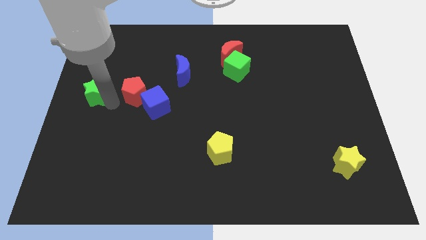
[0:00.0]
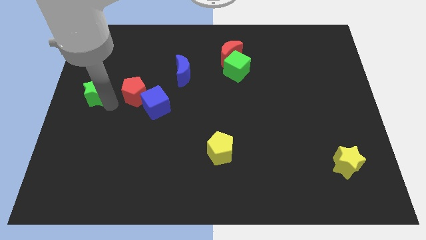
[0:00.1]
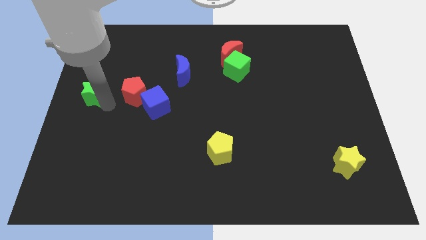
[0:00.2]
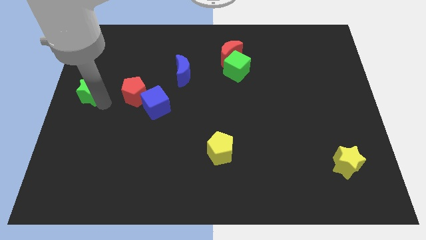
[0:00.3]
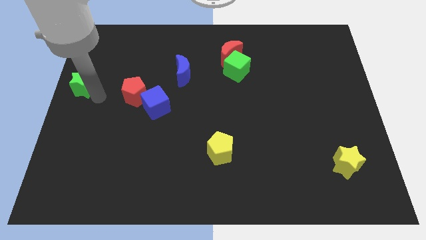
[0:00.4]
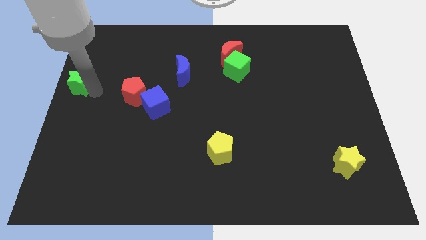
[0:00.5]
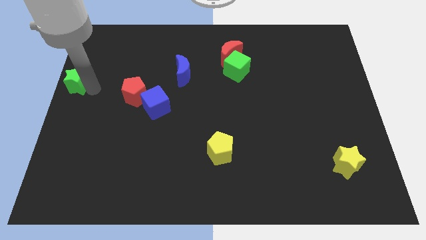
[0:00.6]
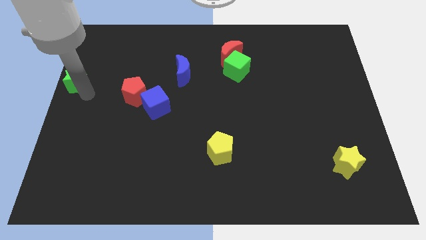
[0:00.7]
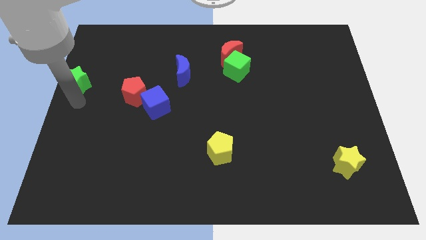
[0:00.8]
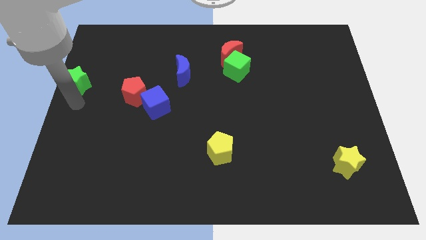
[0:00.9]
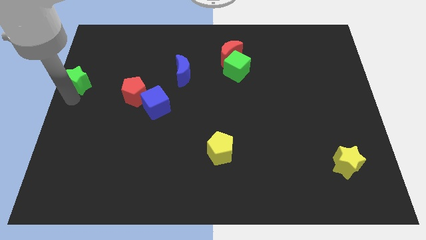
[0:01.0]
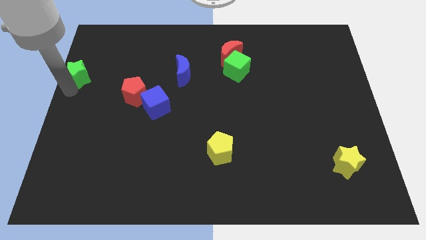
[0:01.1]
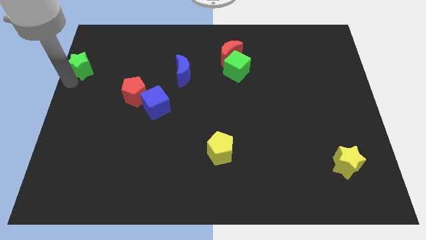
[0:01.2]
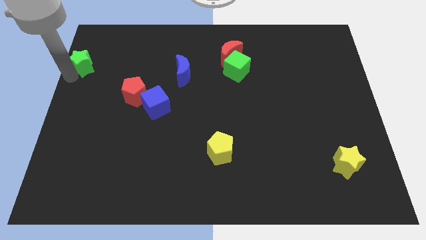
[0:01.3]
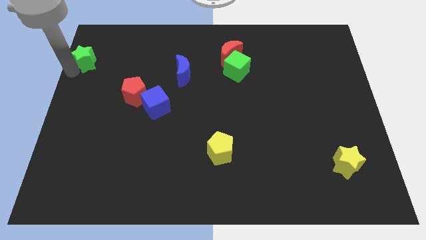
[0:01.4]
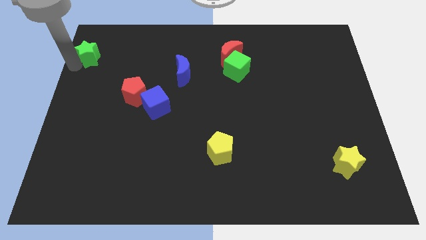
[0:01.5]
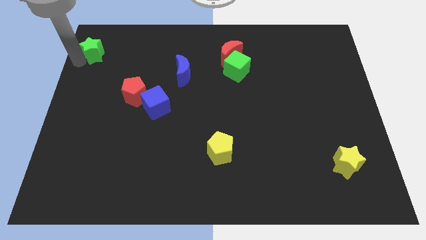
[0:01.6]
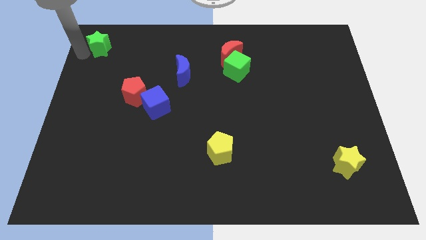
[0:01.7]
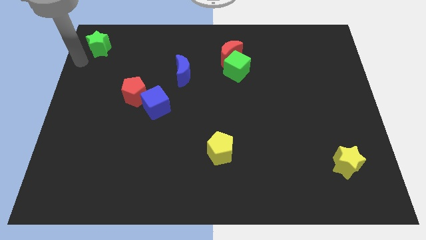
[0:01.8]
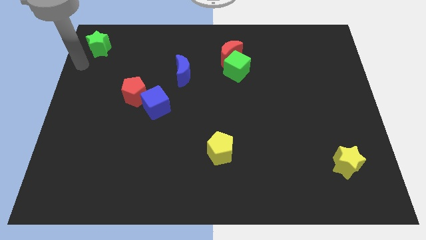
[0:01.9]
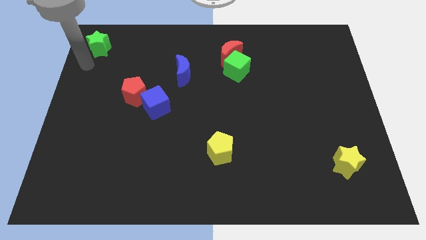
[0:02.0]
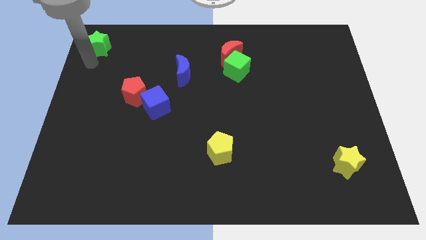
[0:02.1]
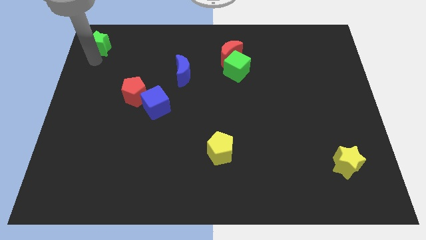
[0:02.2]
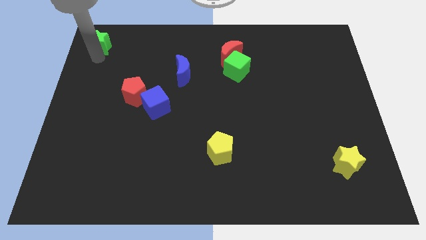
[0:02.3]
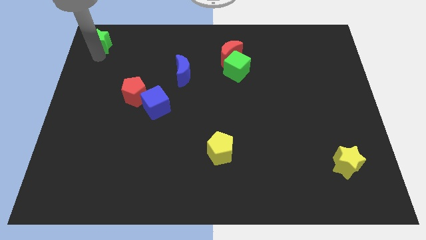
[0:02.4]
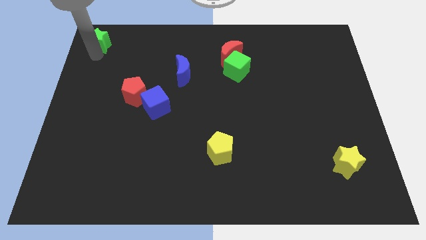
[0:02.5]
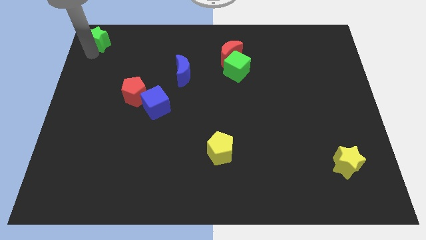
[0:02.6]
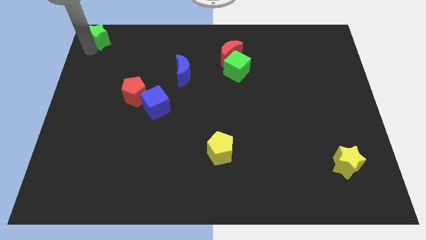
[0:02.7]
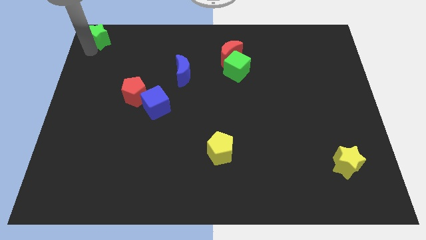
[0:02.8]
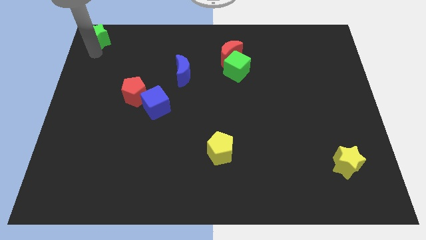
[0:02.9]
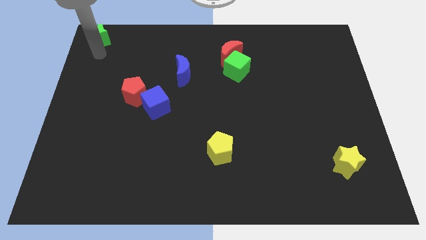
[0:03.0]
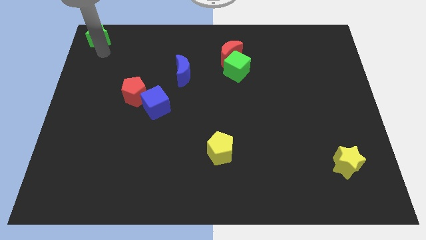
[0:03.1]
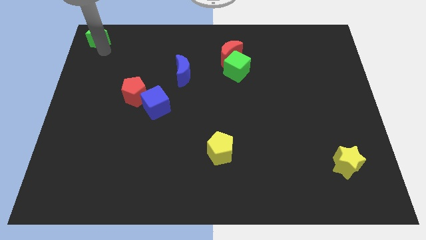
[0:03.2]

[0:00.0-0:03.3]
move the green star to the top left corner of the board

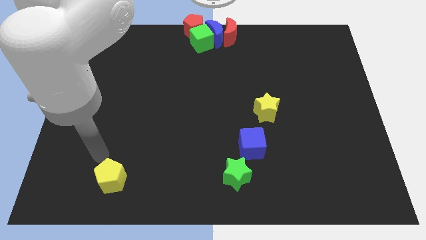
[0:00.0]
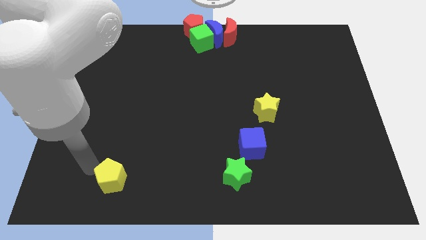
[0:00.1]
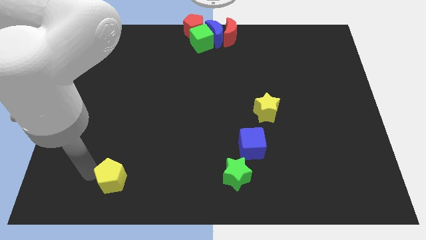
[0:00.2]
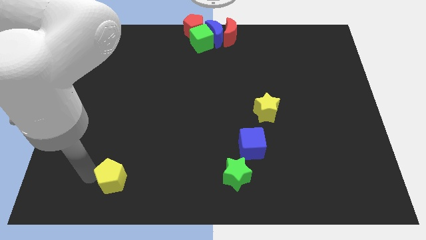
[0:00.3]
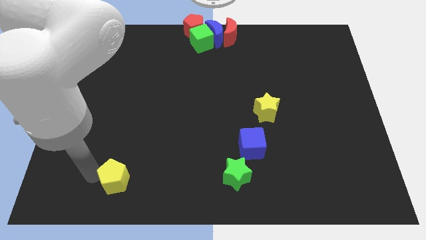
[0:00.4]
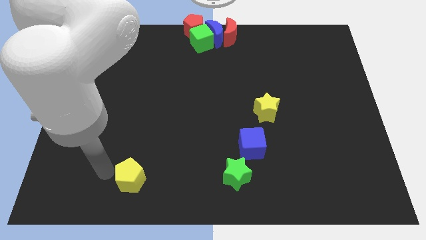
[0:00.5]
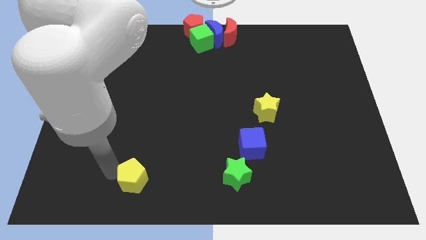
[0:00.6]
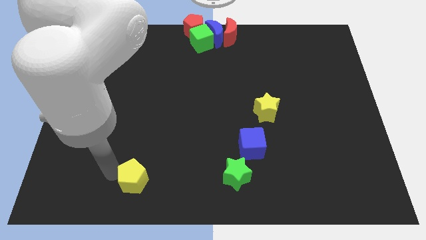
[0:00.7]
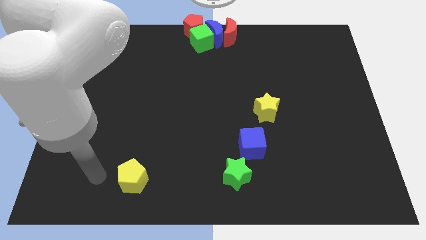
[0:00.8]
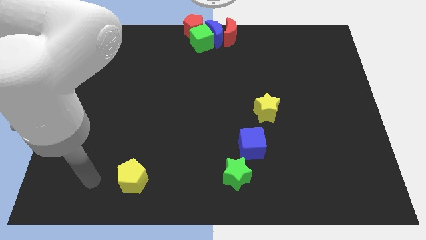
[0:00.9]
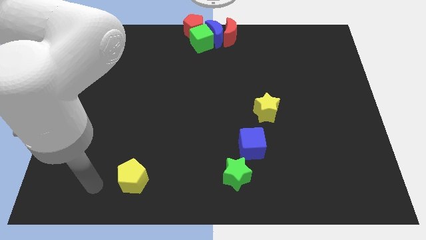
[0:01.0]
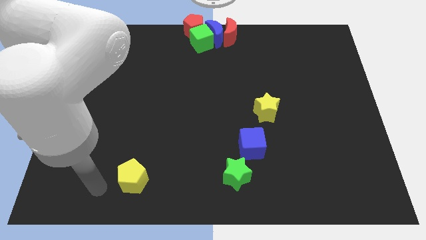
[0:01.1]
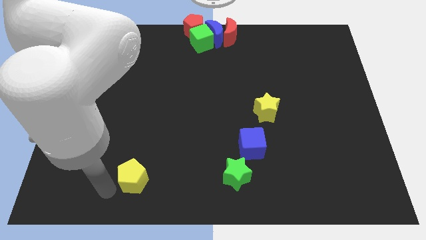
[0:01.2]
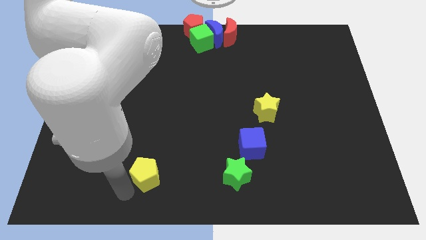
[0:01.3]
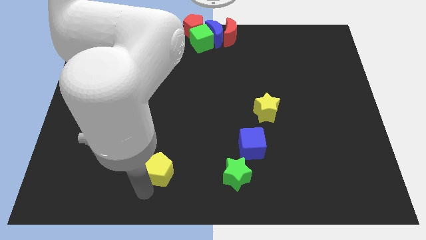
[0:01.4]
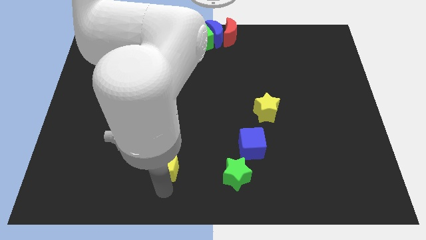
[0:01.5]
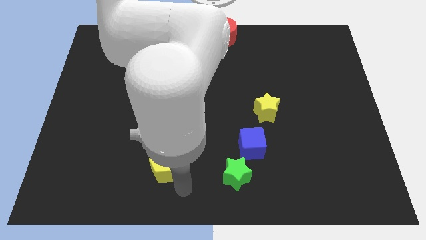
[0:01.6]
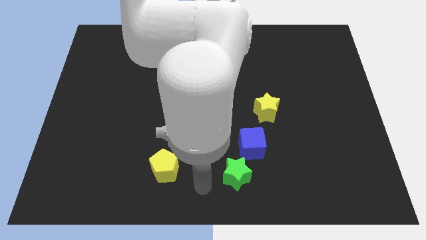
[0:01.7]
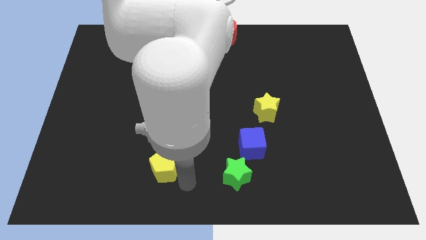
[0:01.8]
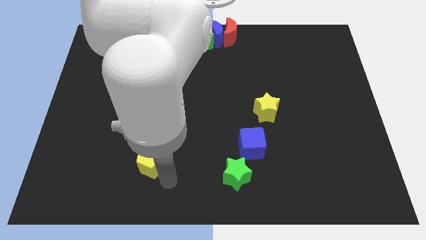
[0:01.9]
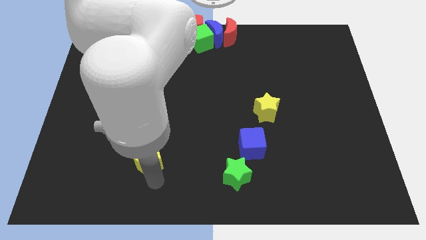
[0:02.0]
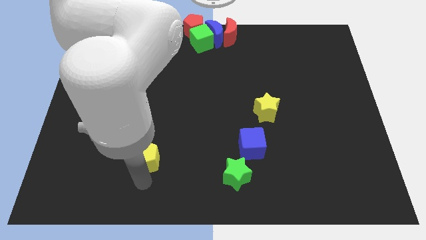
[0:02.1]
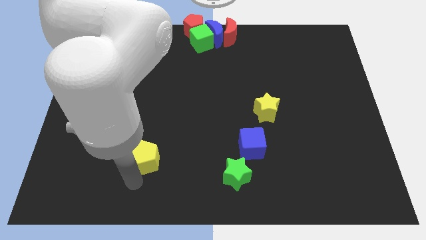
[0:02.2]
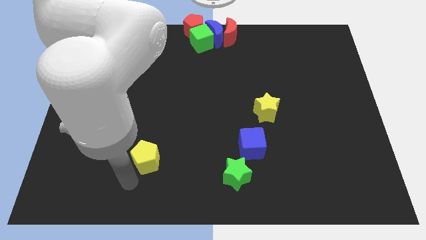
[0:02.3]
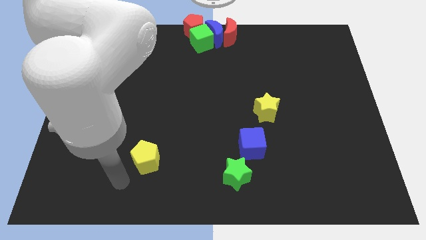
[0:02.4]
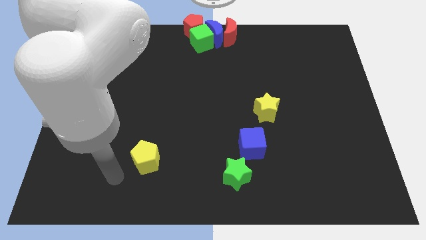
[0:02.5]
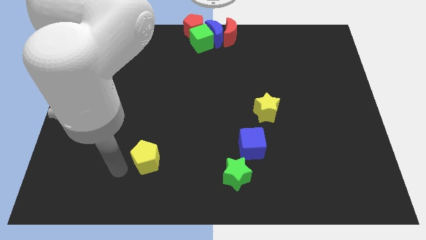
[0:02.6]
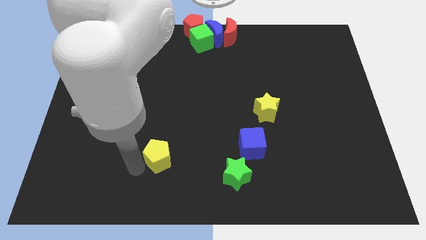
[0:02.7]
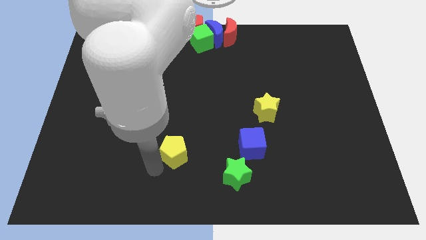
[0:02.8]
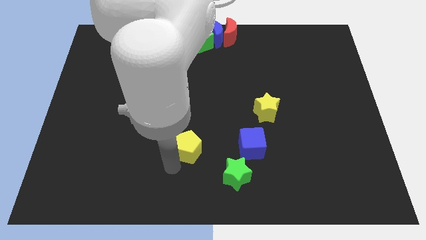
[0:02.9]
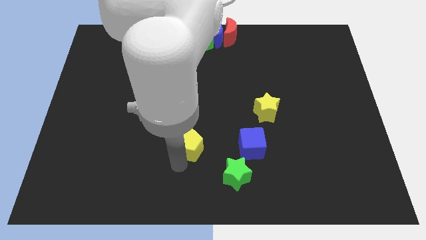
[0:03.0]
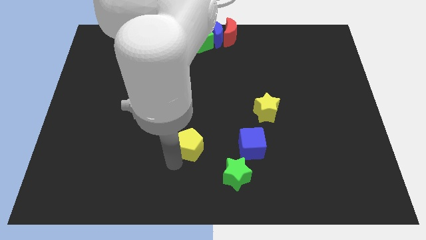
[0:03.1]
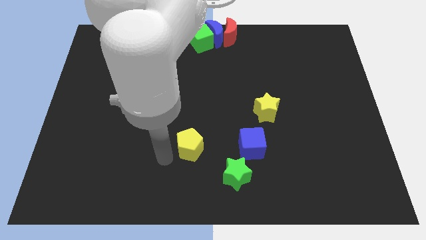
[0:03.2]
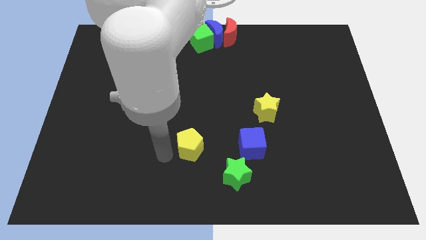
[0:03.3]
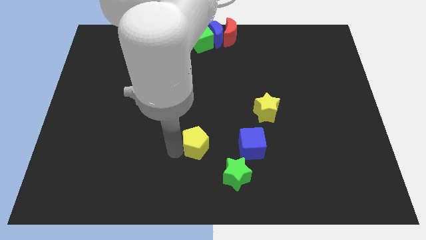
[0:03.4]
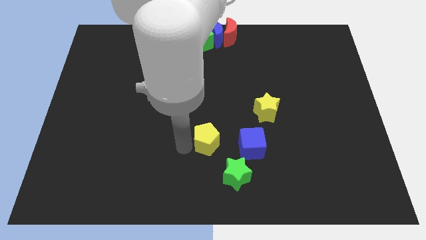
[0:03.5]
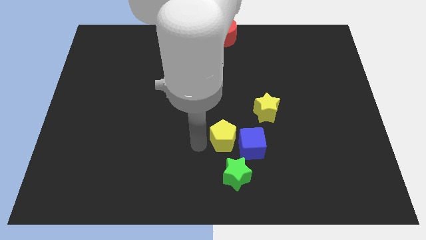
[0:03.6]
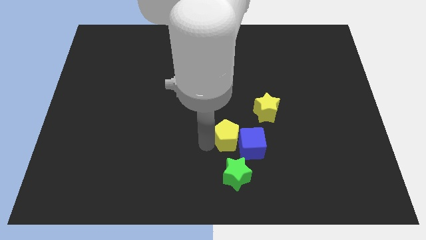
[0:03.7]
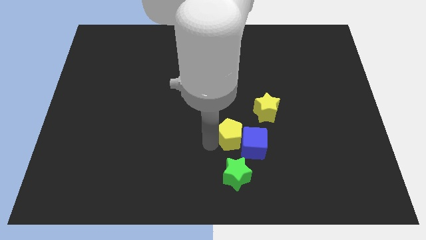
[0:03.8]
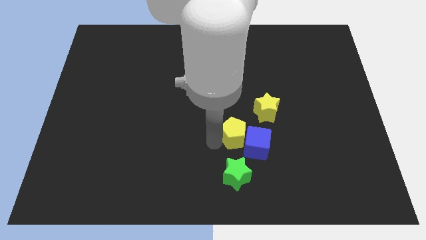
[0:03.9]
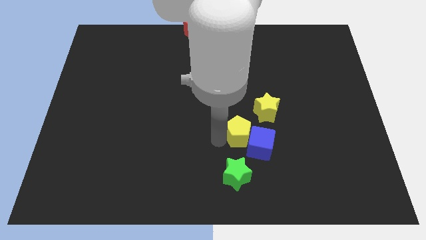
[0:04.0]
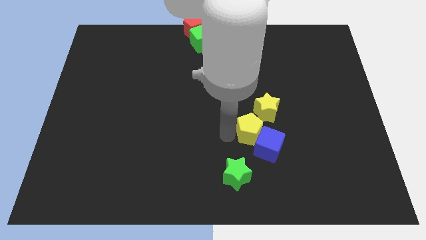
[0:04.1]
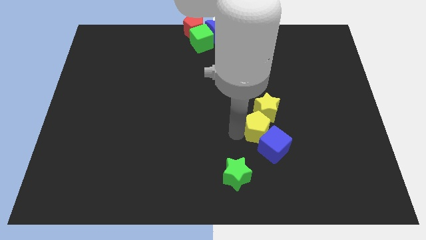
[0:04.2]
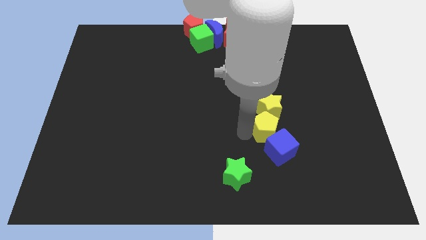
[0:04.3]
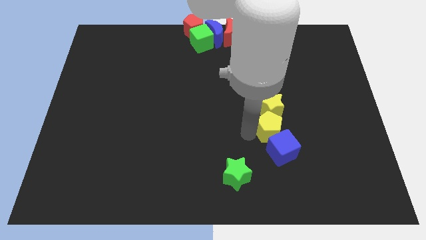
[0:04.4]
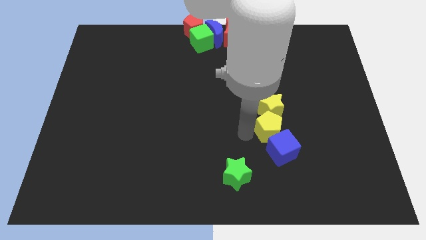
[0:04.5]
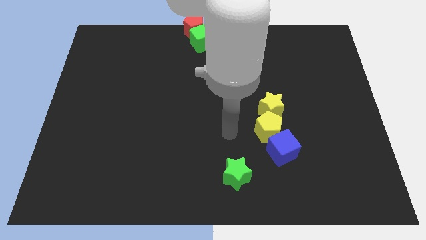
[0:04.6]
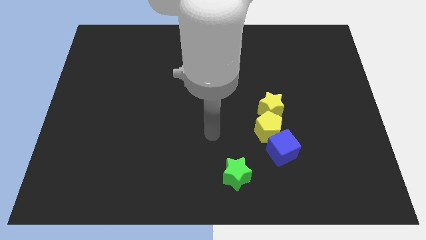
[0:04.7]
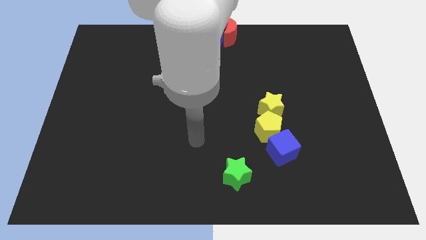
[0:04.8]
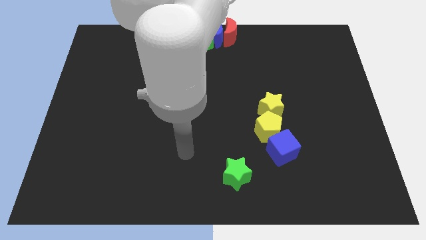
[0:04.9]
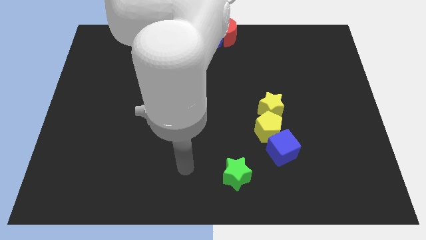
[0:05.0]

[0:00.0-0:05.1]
place the yellow pentagon in between the yellow star and the blue cube

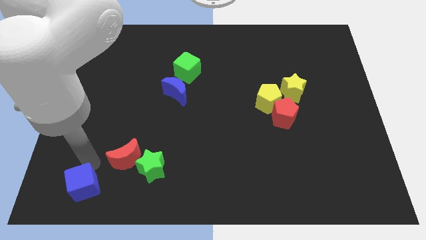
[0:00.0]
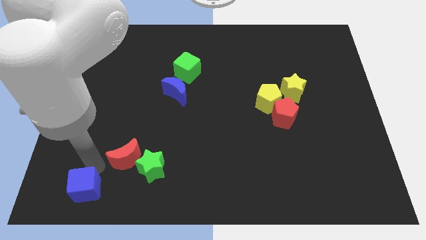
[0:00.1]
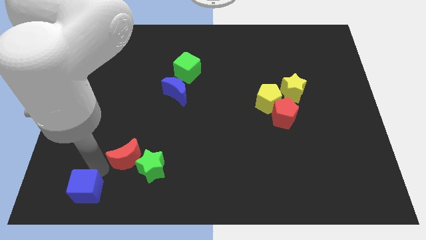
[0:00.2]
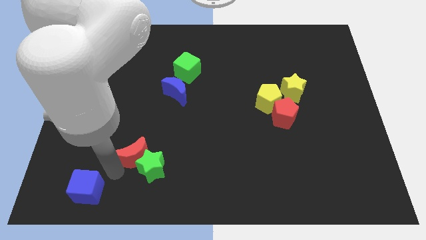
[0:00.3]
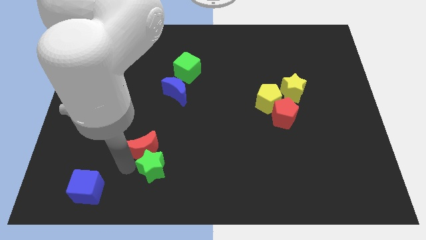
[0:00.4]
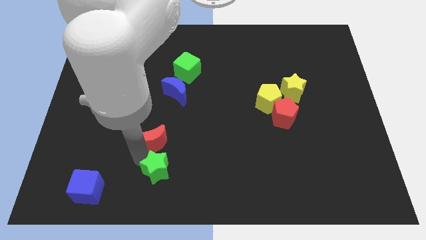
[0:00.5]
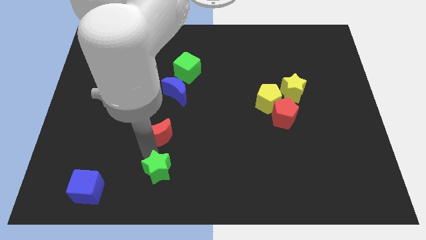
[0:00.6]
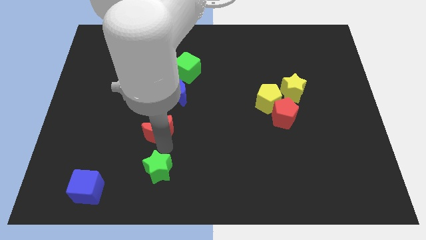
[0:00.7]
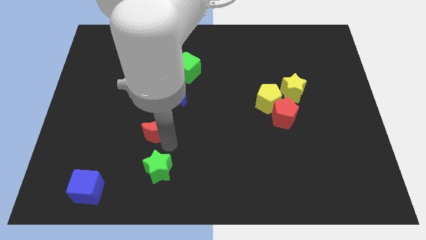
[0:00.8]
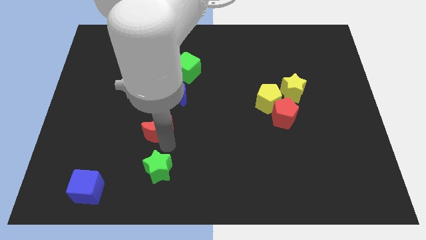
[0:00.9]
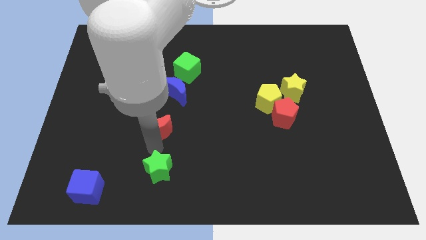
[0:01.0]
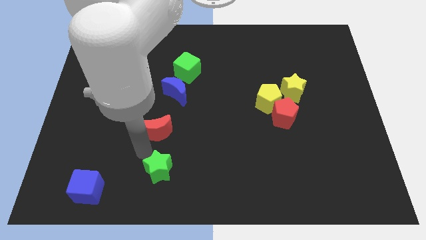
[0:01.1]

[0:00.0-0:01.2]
push the red crescent to the top of the green star
